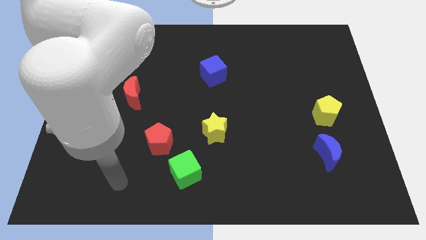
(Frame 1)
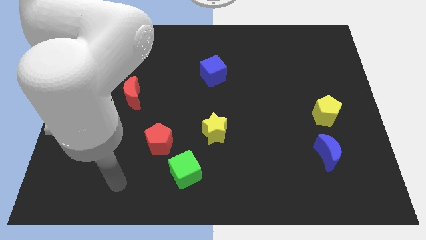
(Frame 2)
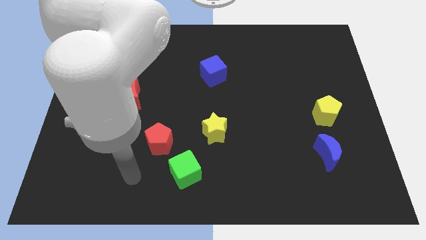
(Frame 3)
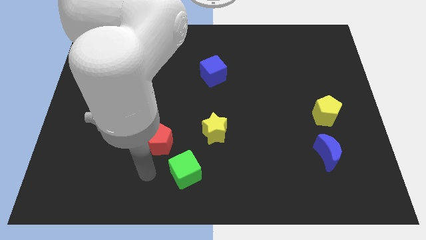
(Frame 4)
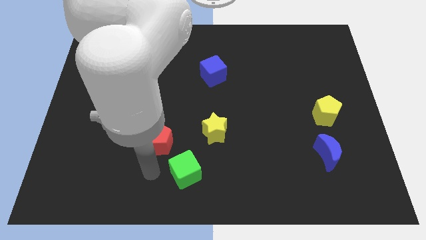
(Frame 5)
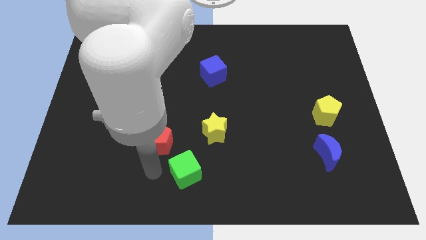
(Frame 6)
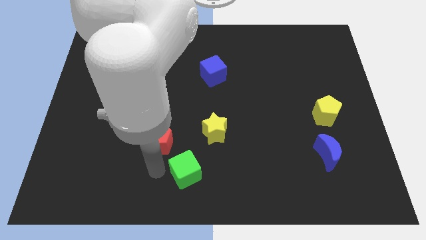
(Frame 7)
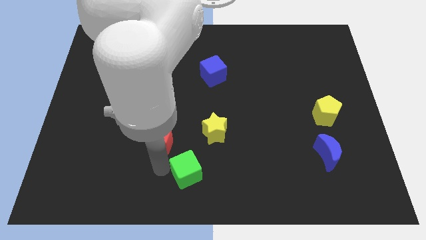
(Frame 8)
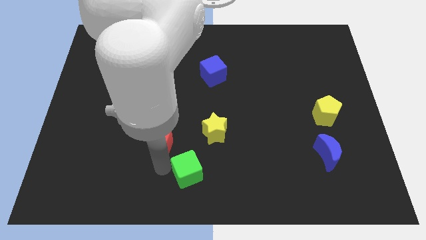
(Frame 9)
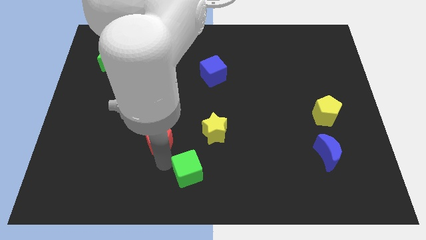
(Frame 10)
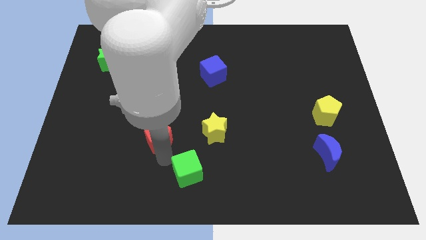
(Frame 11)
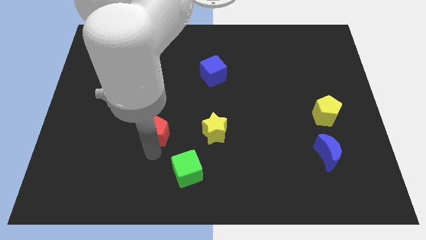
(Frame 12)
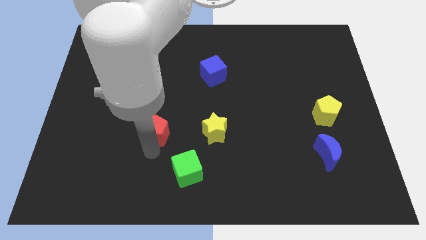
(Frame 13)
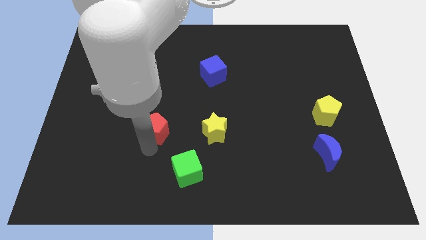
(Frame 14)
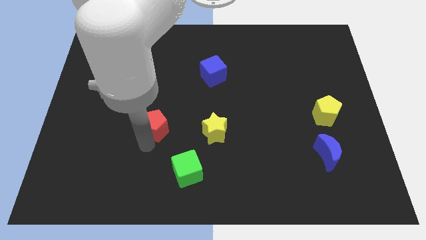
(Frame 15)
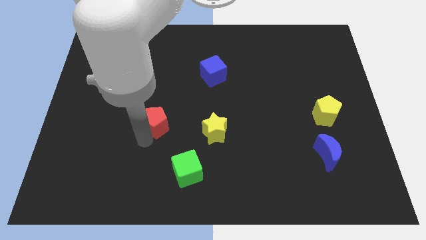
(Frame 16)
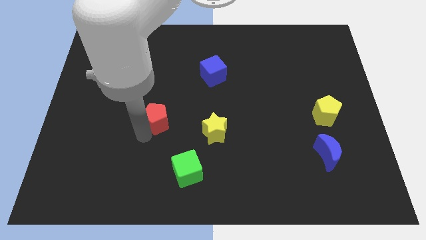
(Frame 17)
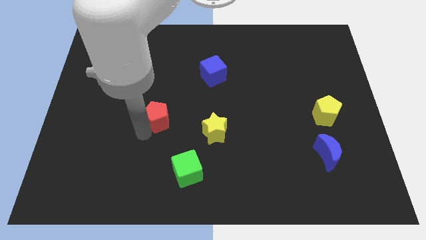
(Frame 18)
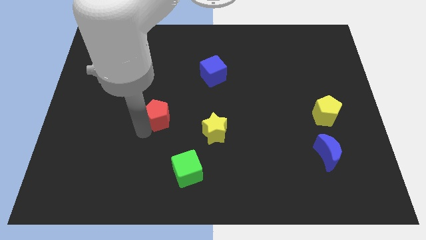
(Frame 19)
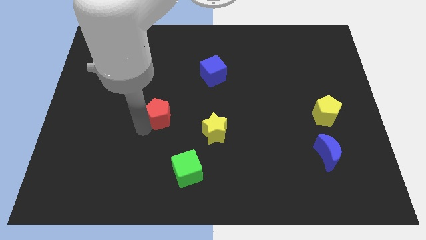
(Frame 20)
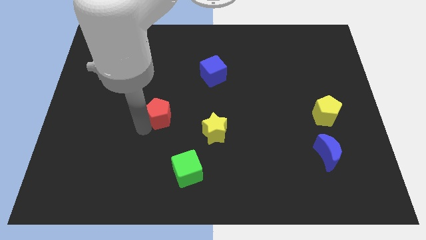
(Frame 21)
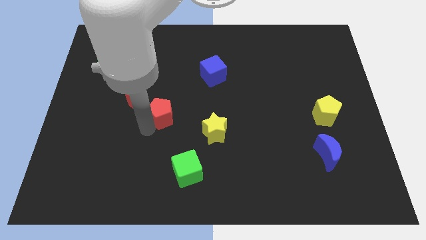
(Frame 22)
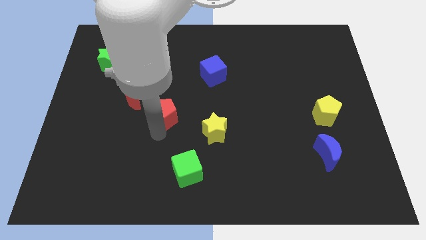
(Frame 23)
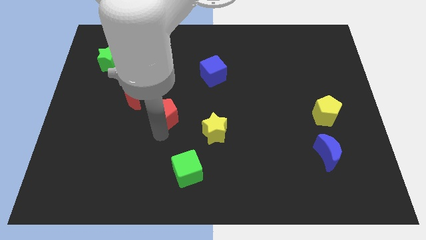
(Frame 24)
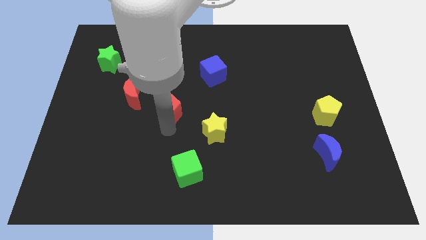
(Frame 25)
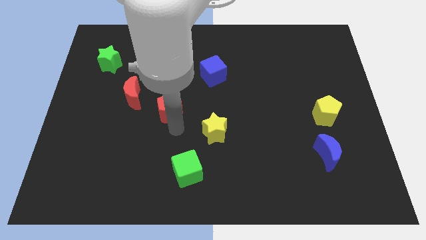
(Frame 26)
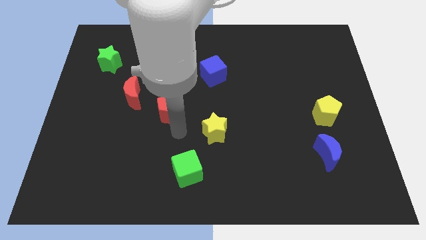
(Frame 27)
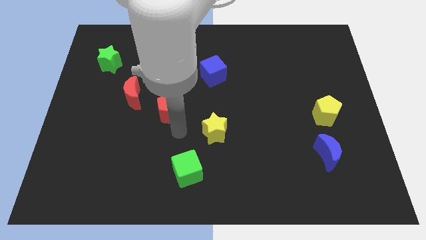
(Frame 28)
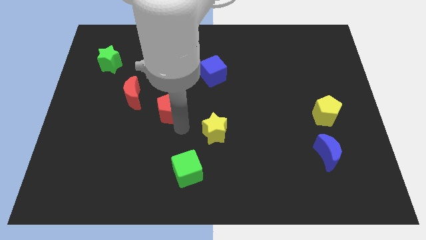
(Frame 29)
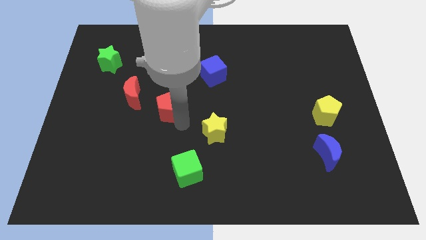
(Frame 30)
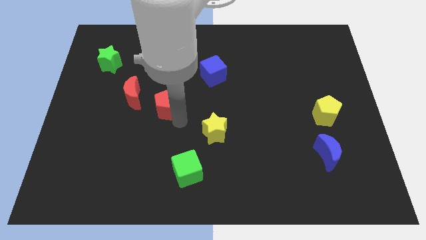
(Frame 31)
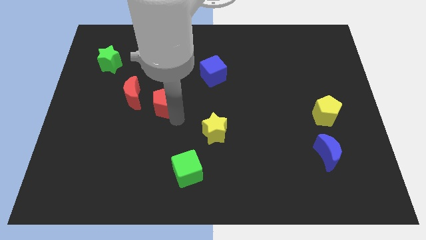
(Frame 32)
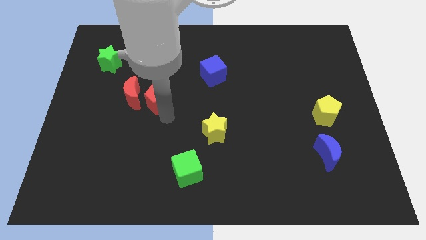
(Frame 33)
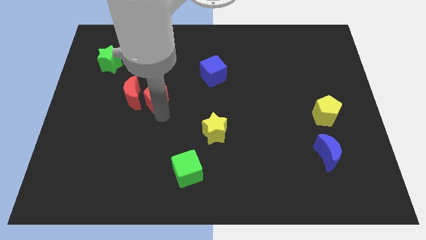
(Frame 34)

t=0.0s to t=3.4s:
move the red pentagon to the red crescent

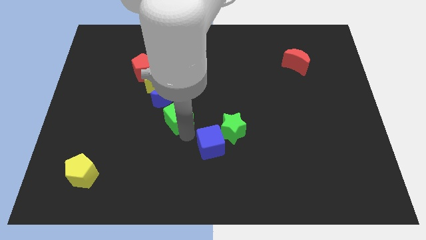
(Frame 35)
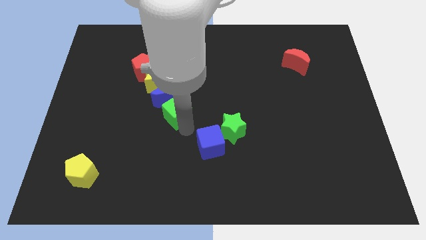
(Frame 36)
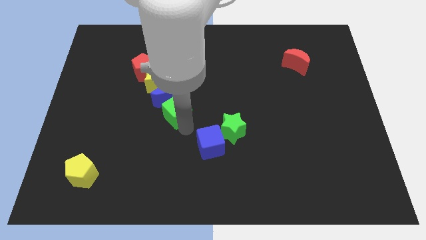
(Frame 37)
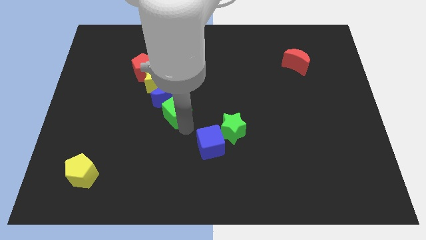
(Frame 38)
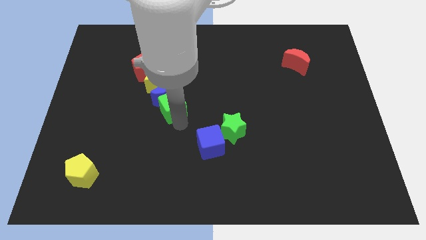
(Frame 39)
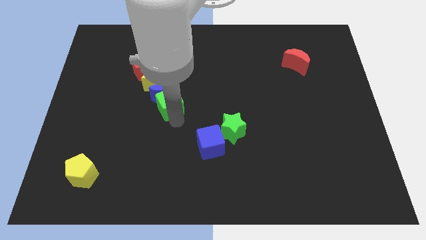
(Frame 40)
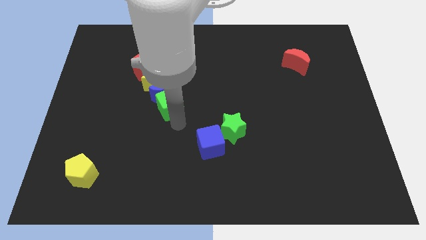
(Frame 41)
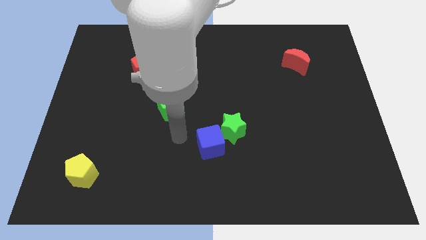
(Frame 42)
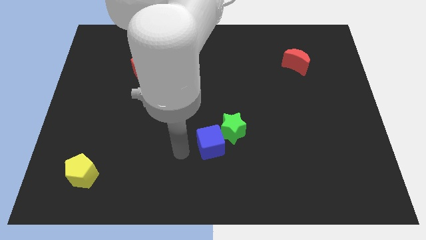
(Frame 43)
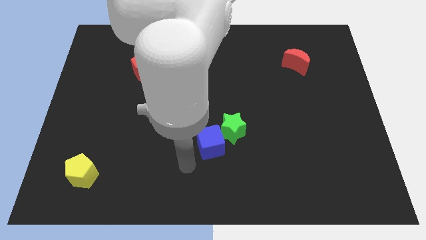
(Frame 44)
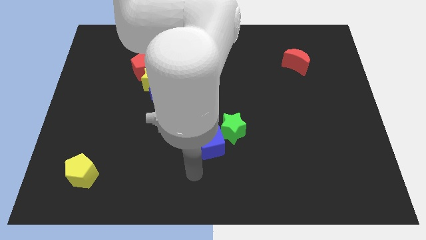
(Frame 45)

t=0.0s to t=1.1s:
move the green cube into the blue crescent

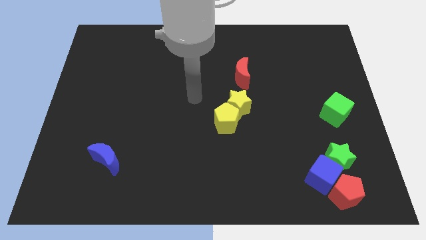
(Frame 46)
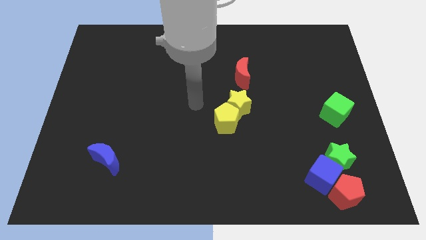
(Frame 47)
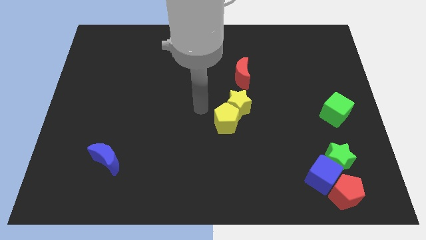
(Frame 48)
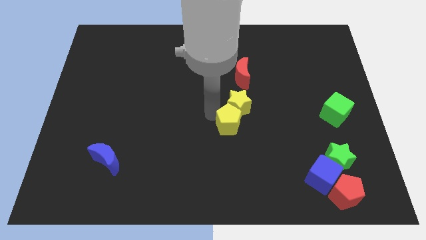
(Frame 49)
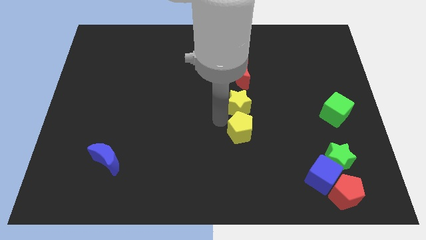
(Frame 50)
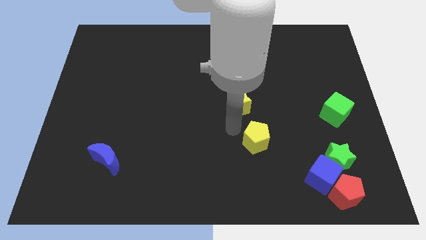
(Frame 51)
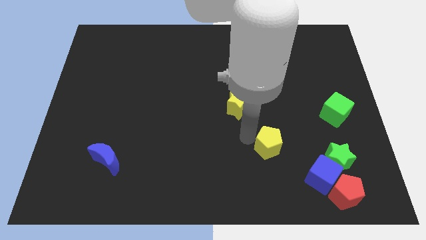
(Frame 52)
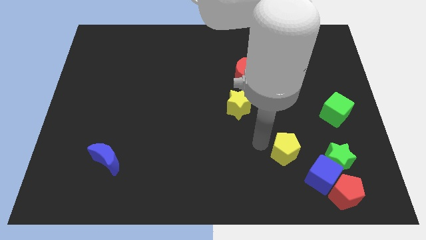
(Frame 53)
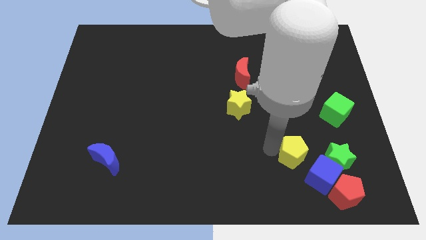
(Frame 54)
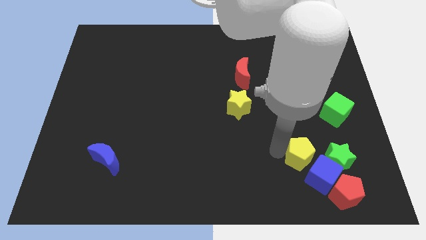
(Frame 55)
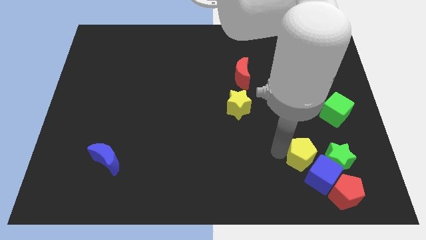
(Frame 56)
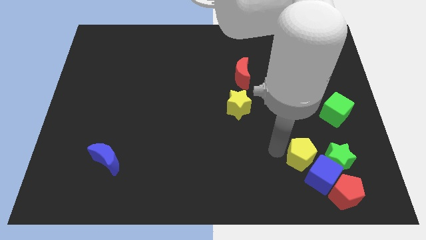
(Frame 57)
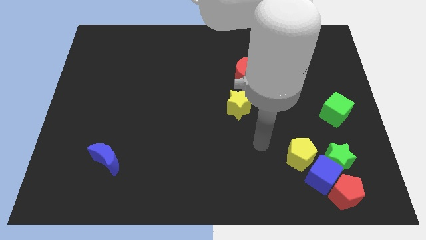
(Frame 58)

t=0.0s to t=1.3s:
separate the yellow pentagon from the yellow star

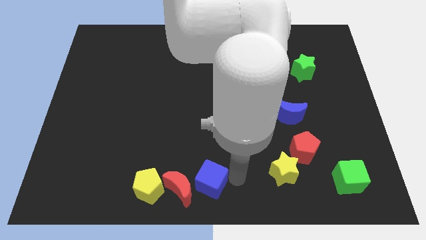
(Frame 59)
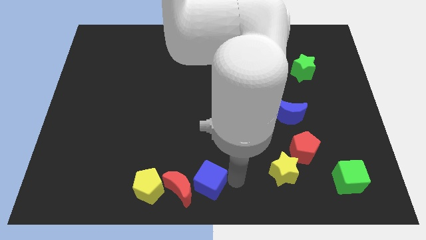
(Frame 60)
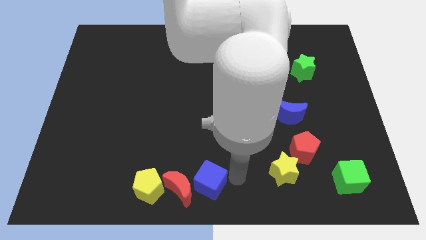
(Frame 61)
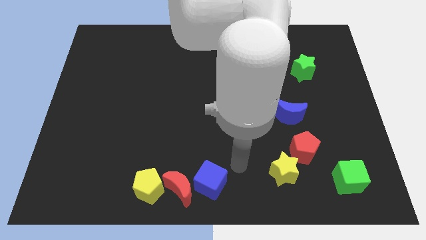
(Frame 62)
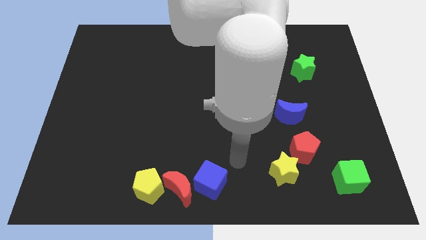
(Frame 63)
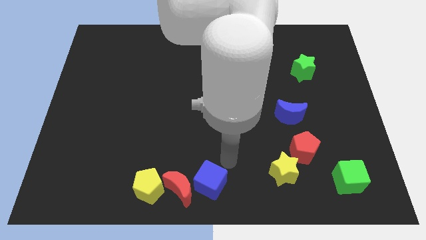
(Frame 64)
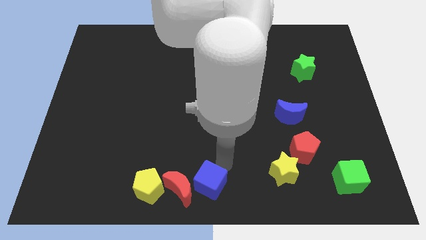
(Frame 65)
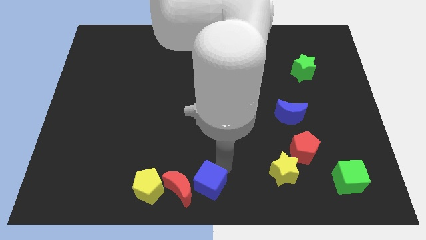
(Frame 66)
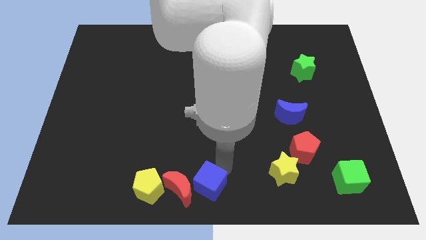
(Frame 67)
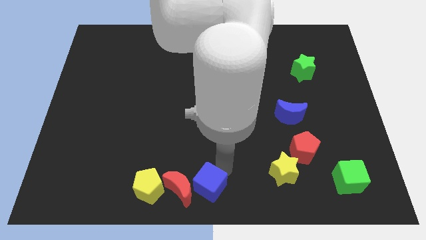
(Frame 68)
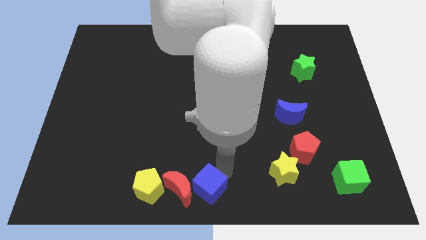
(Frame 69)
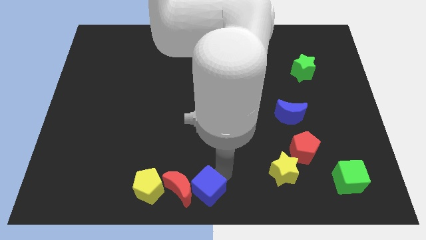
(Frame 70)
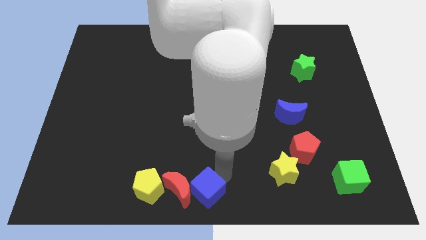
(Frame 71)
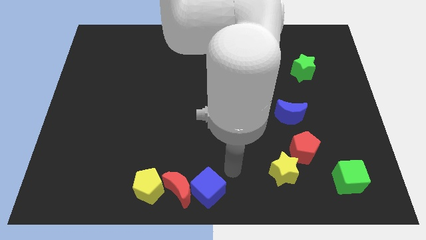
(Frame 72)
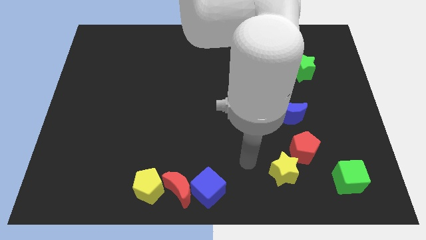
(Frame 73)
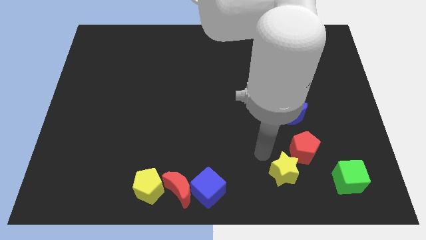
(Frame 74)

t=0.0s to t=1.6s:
push the blue cube into red crescent

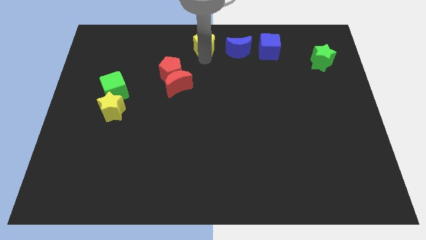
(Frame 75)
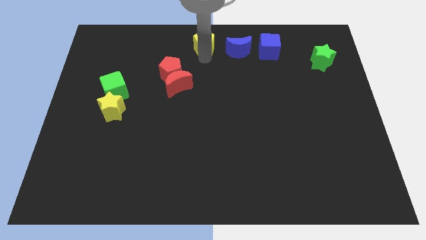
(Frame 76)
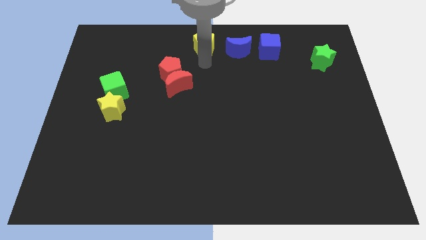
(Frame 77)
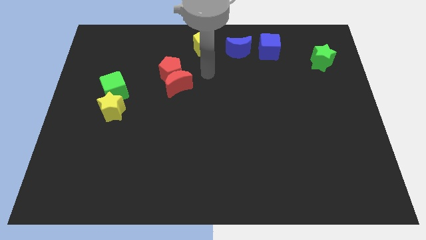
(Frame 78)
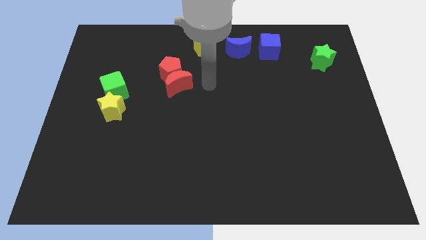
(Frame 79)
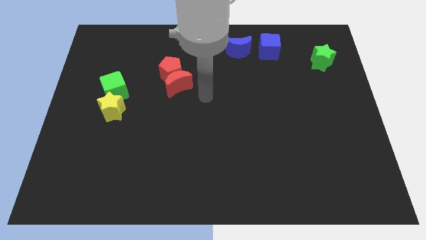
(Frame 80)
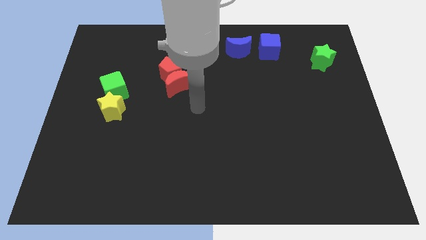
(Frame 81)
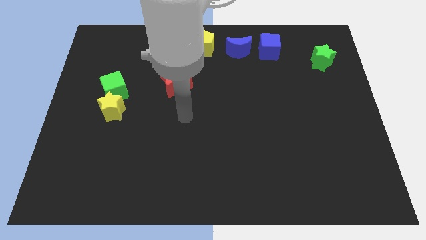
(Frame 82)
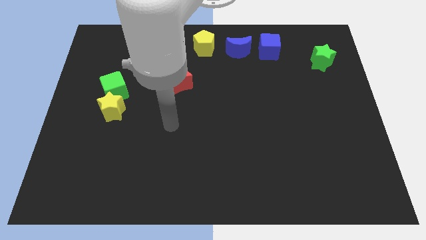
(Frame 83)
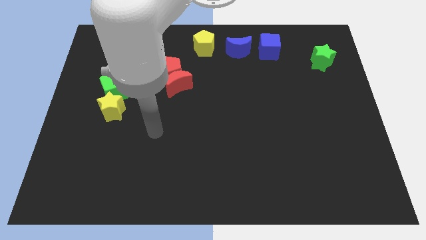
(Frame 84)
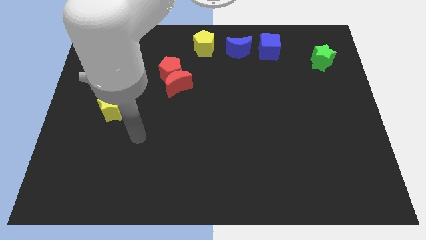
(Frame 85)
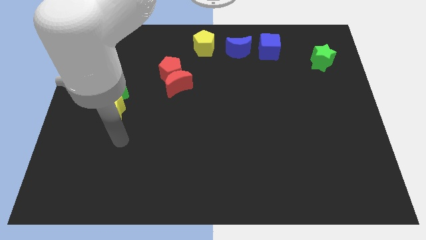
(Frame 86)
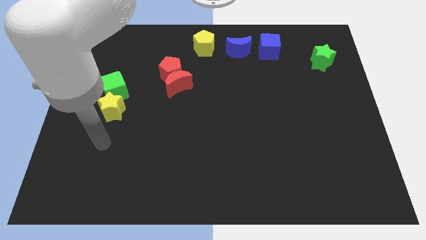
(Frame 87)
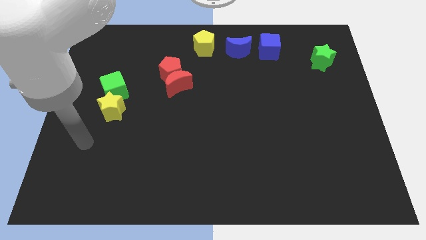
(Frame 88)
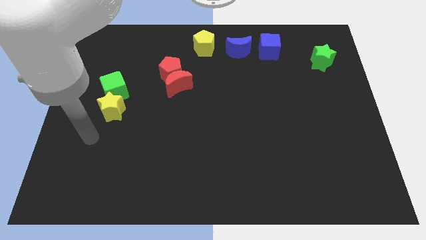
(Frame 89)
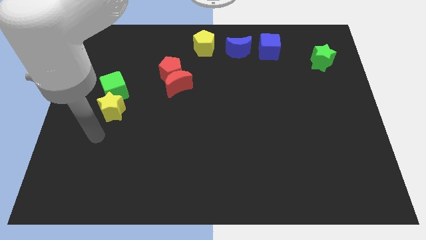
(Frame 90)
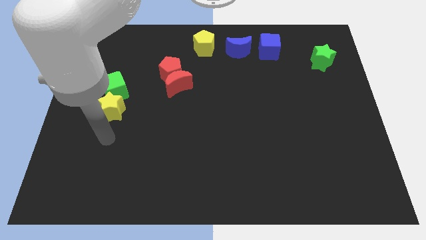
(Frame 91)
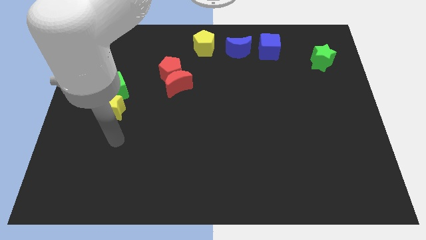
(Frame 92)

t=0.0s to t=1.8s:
place your arm below the yellow star
